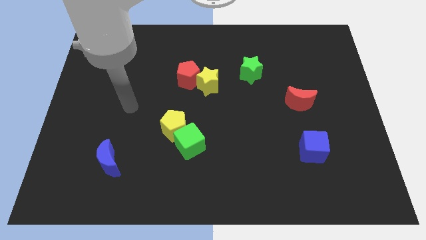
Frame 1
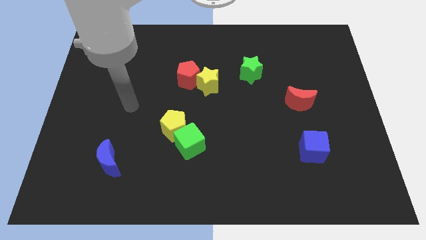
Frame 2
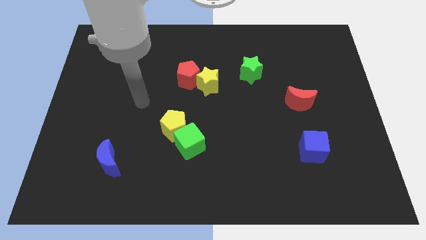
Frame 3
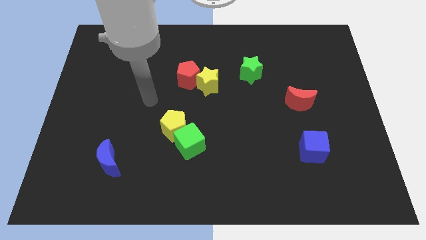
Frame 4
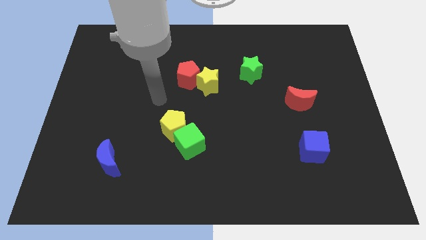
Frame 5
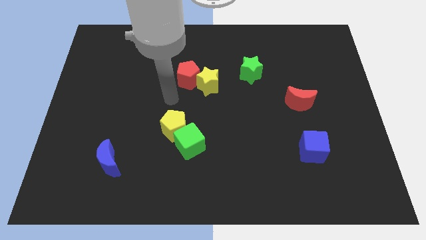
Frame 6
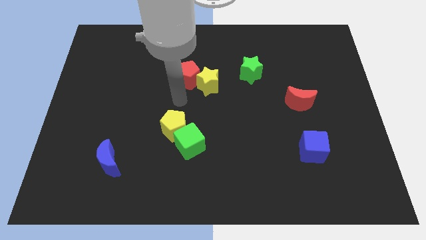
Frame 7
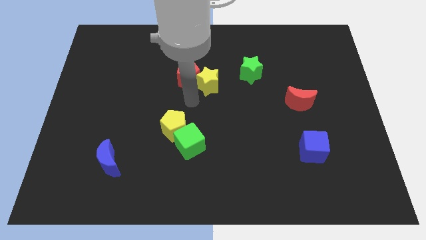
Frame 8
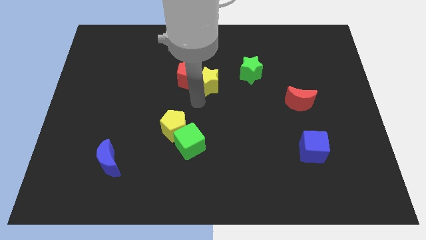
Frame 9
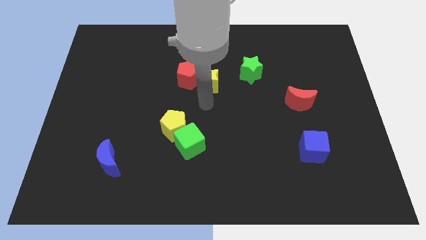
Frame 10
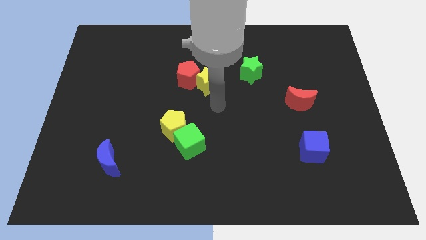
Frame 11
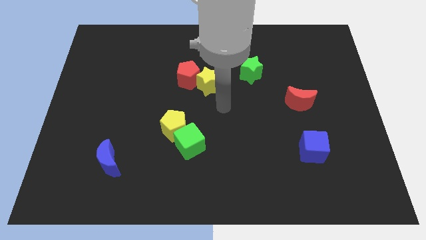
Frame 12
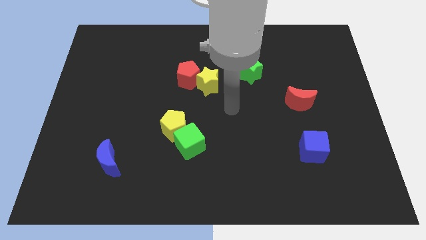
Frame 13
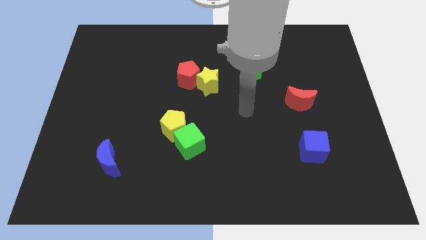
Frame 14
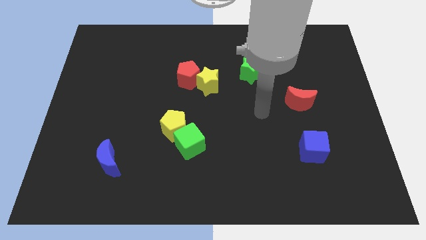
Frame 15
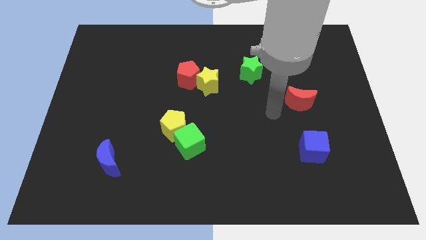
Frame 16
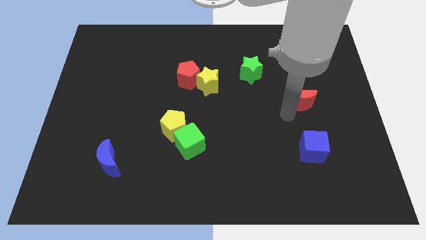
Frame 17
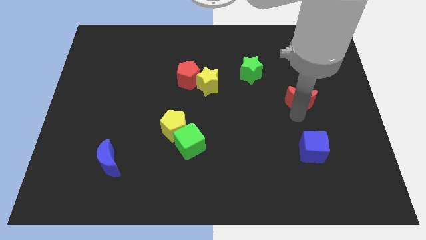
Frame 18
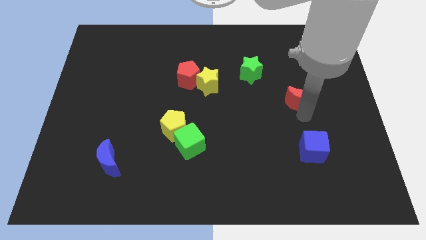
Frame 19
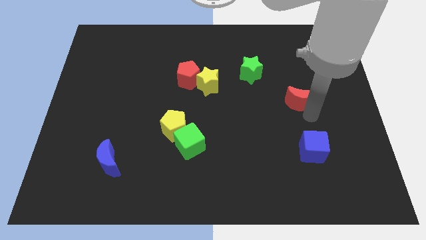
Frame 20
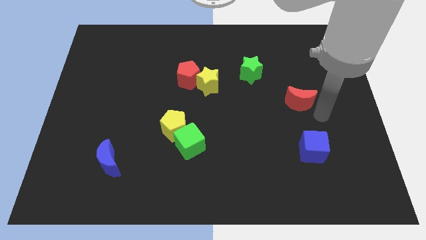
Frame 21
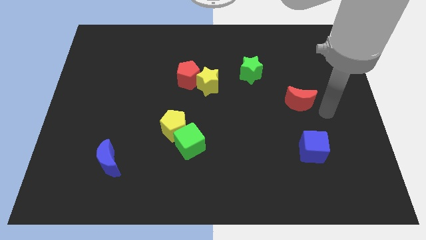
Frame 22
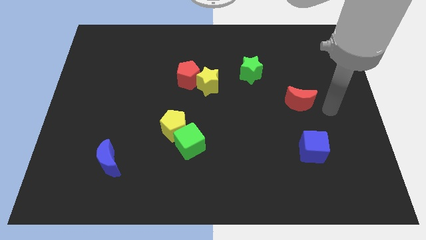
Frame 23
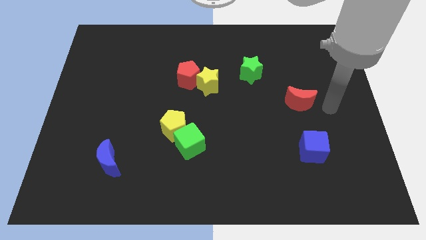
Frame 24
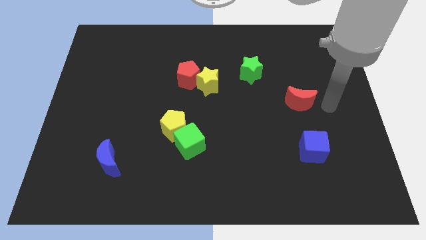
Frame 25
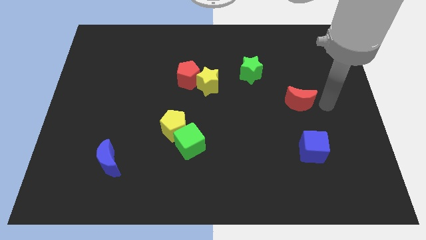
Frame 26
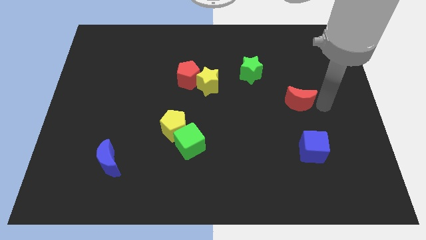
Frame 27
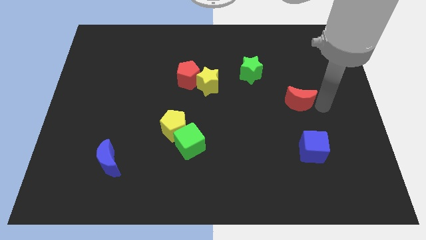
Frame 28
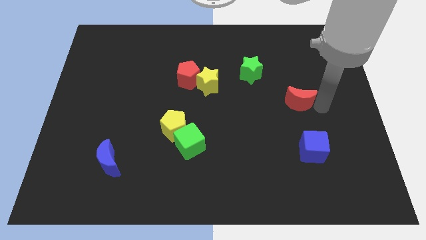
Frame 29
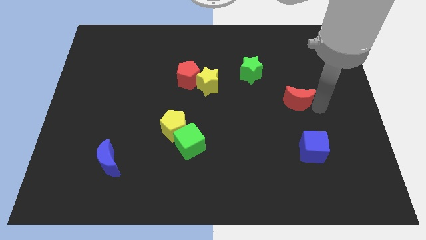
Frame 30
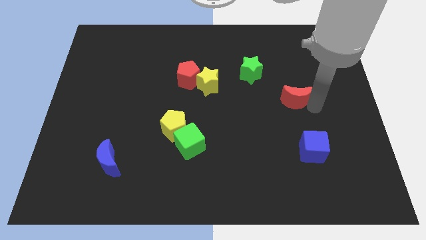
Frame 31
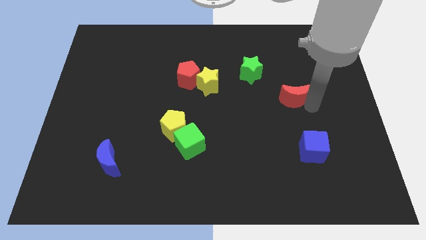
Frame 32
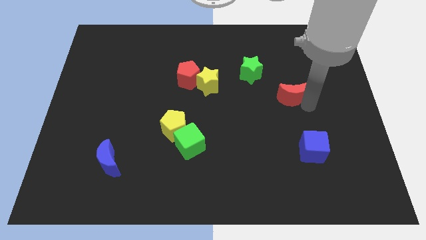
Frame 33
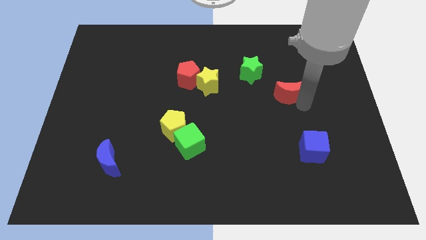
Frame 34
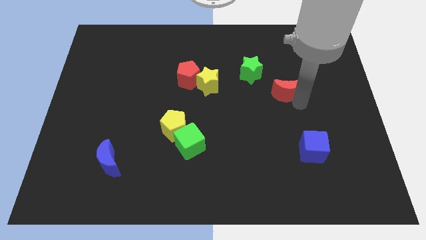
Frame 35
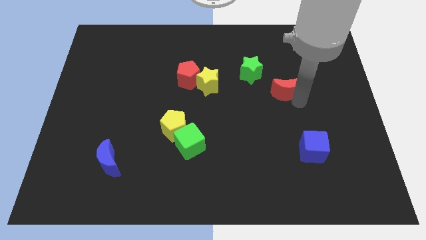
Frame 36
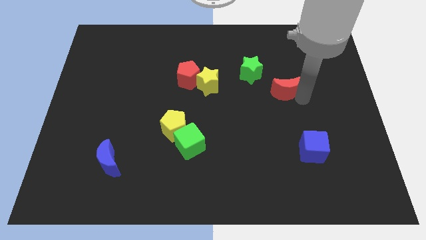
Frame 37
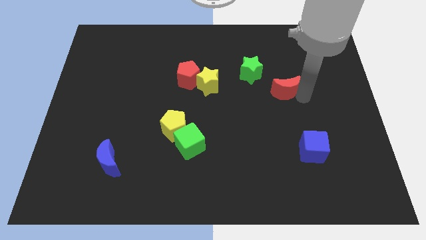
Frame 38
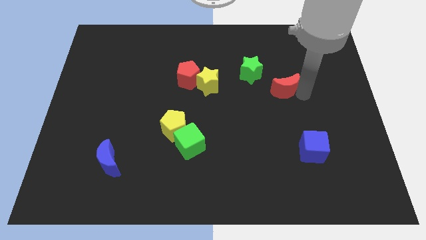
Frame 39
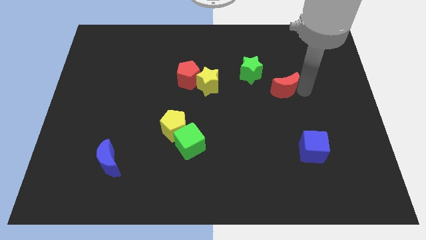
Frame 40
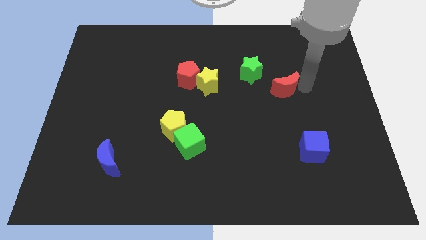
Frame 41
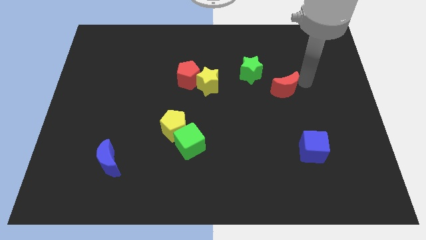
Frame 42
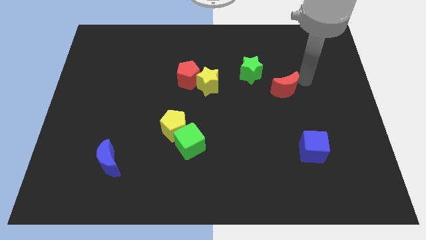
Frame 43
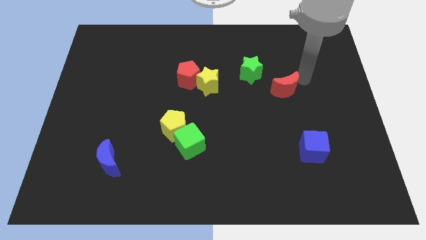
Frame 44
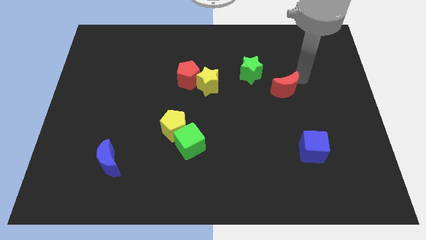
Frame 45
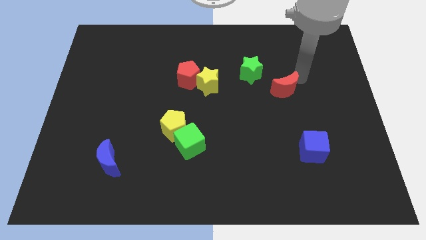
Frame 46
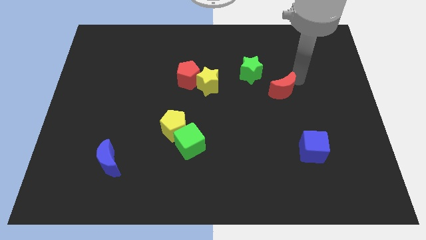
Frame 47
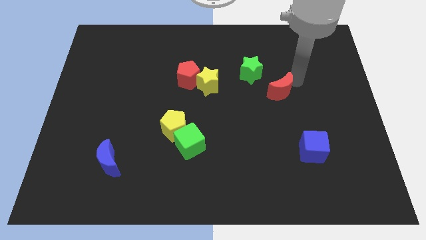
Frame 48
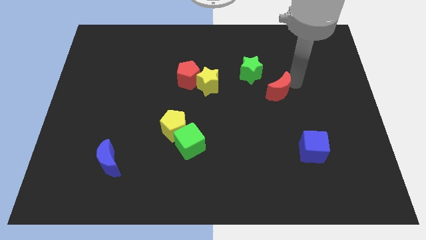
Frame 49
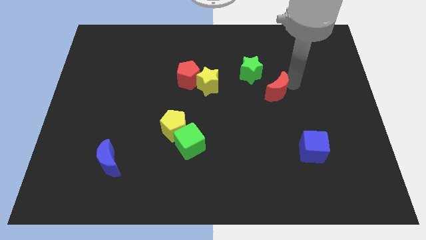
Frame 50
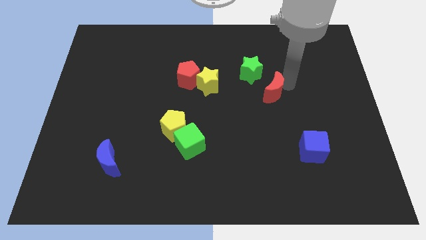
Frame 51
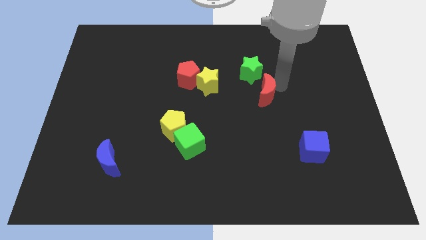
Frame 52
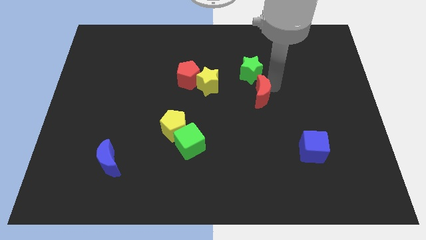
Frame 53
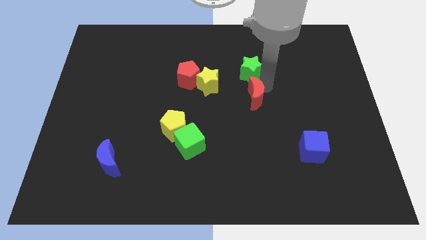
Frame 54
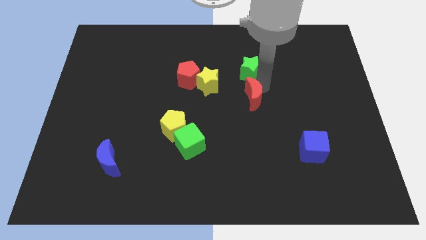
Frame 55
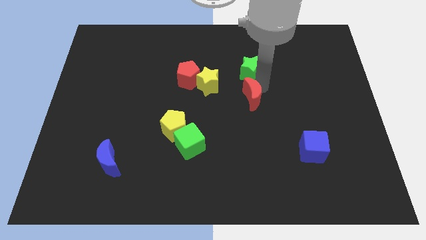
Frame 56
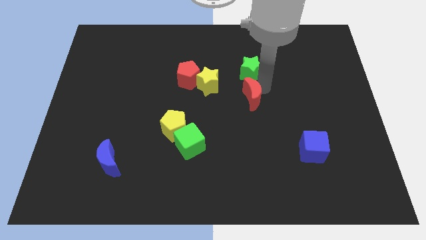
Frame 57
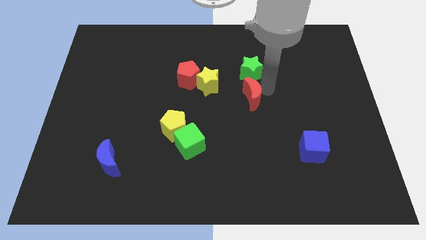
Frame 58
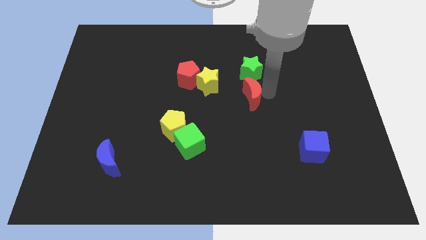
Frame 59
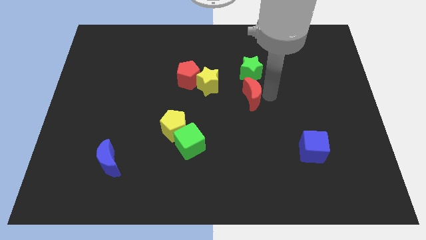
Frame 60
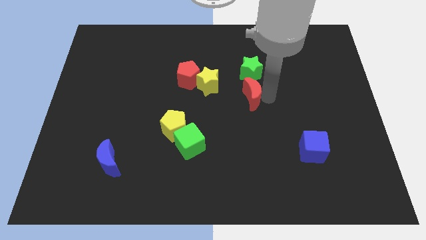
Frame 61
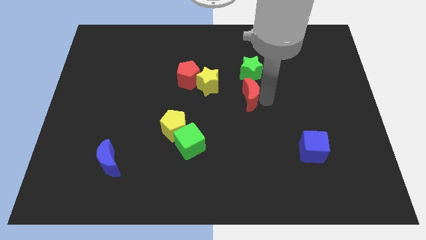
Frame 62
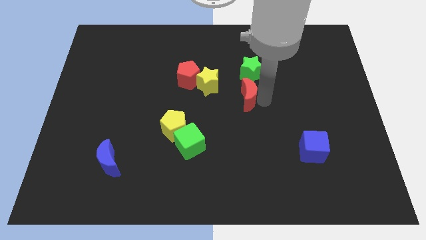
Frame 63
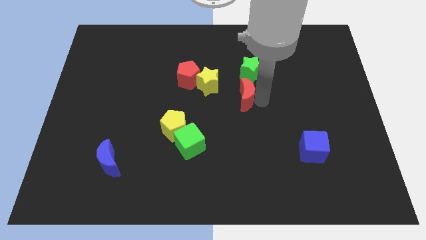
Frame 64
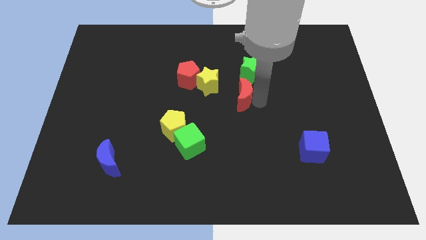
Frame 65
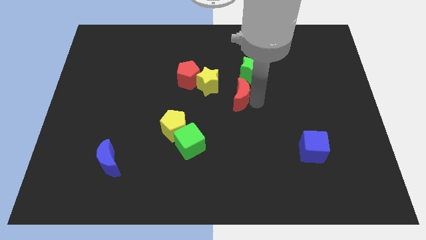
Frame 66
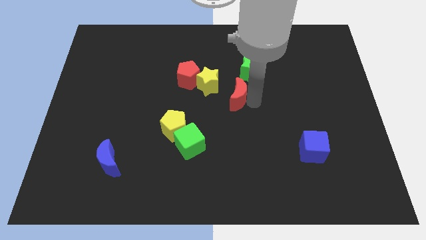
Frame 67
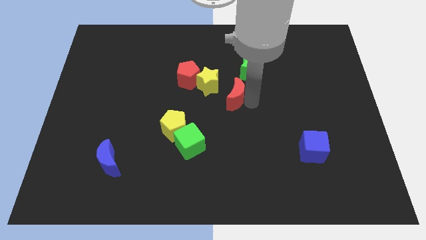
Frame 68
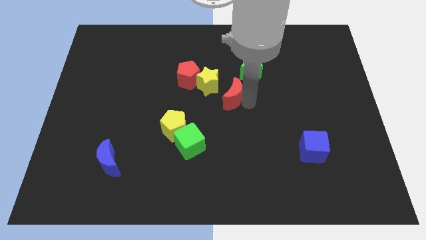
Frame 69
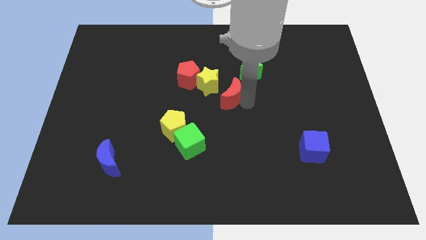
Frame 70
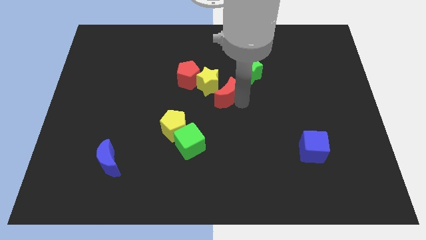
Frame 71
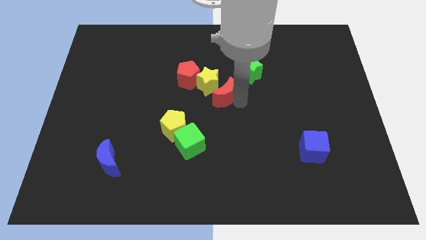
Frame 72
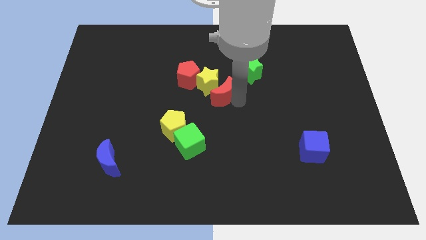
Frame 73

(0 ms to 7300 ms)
push the red moon to the yellow star

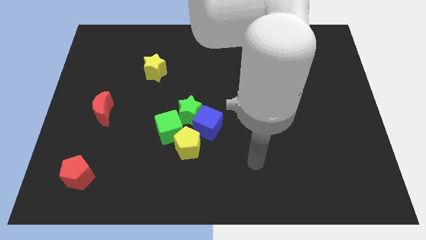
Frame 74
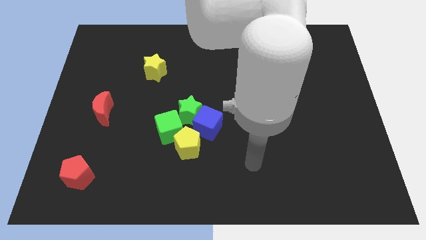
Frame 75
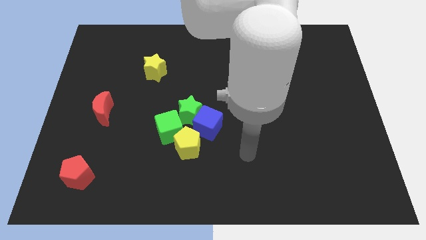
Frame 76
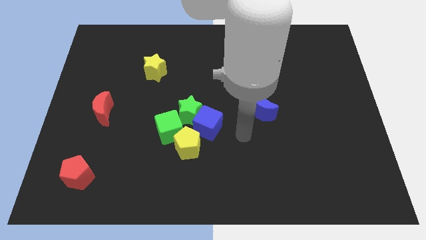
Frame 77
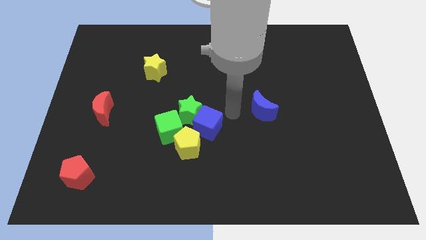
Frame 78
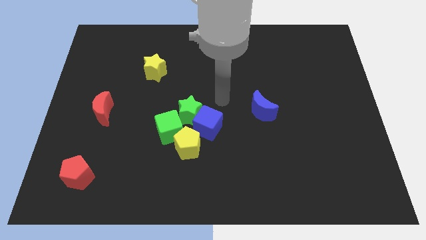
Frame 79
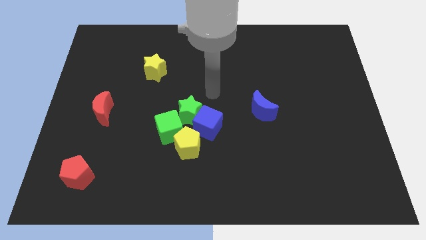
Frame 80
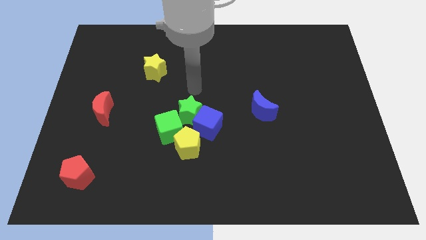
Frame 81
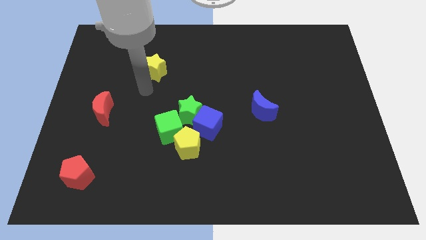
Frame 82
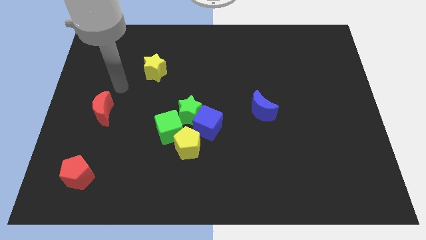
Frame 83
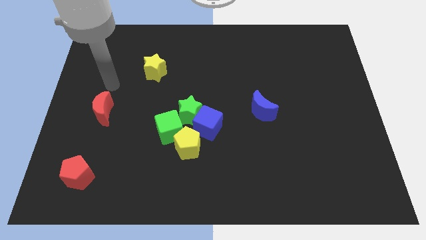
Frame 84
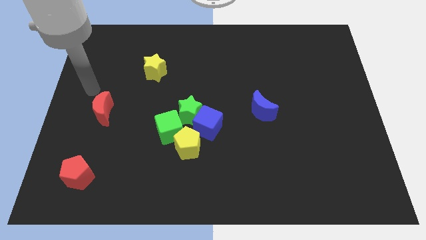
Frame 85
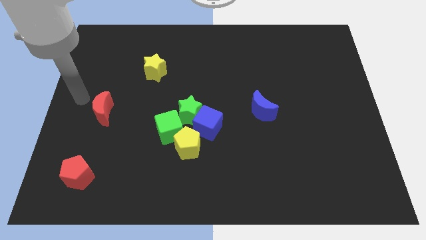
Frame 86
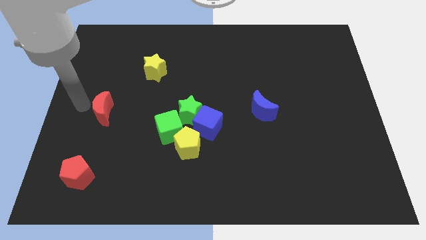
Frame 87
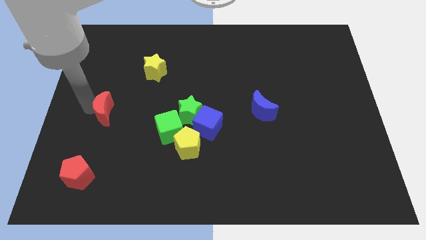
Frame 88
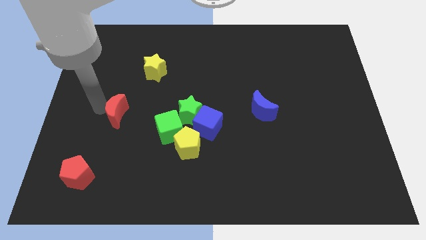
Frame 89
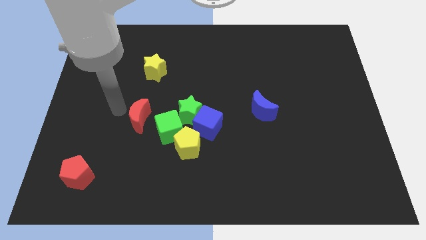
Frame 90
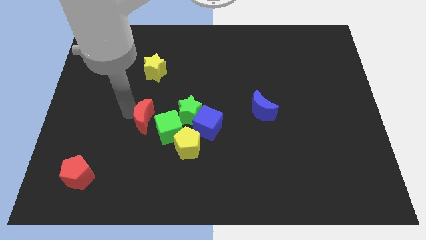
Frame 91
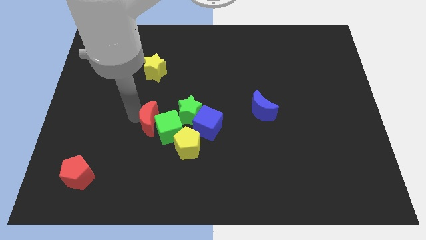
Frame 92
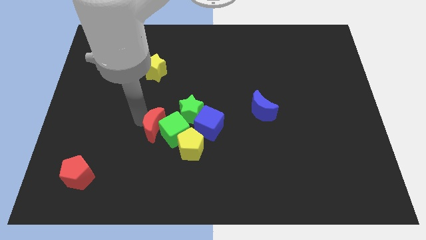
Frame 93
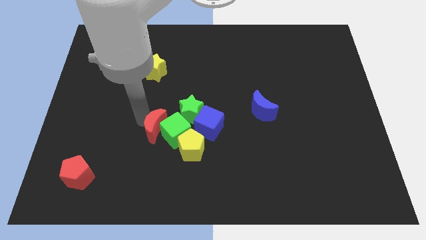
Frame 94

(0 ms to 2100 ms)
slide the red moon close to the green cube
